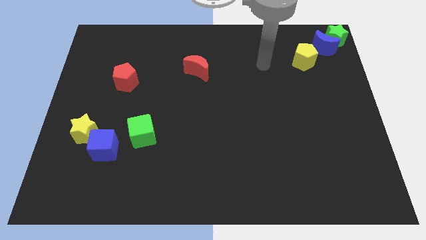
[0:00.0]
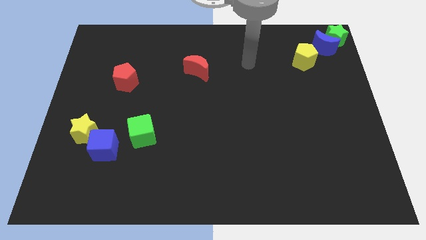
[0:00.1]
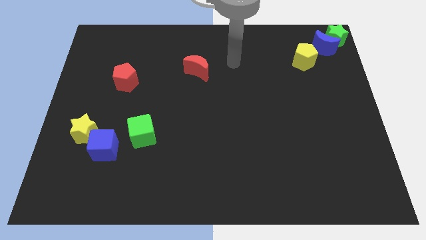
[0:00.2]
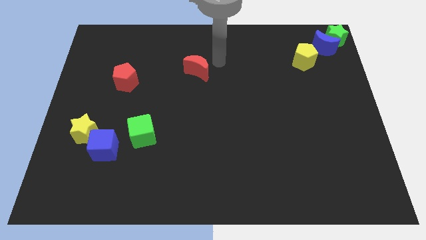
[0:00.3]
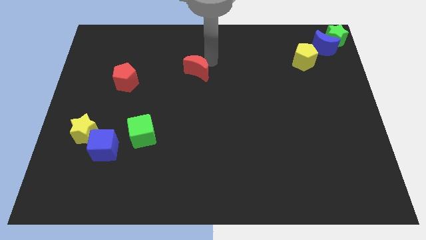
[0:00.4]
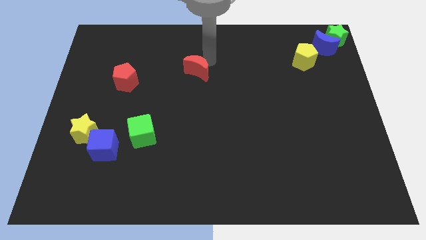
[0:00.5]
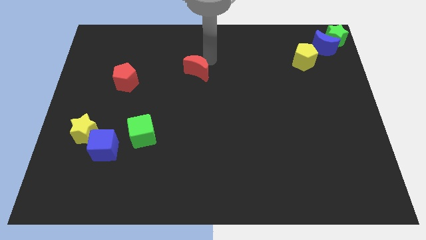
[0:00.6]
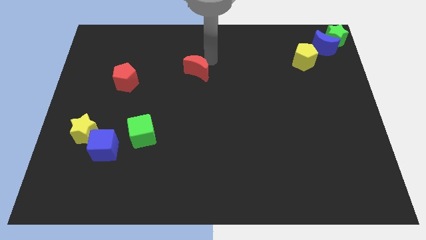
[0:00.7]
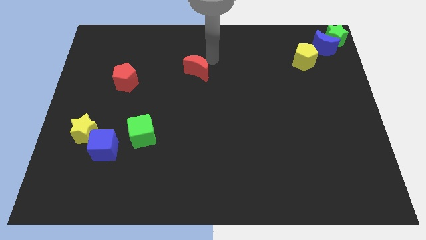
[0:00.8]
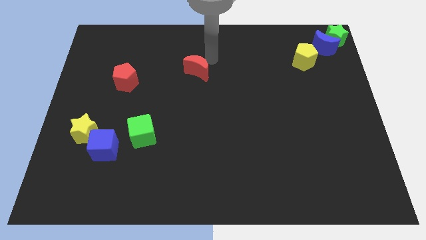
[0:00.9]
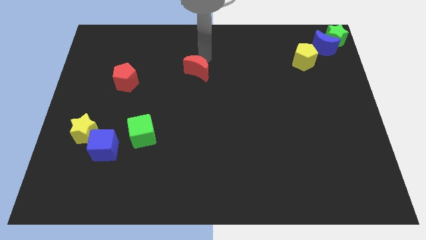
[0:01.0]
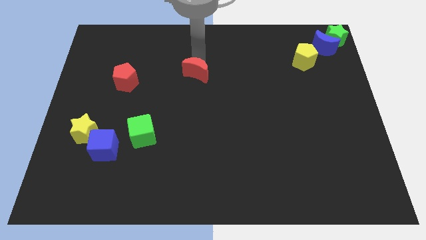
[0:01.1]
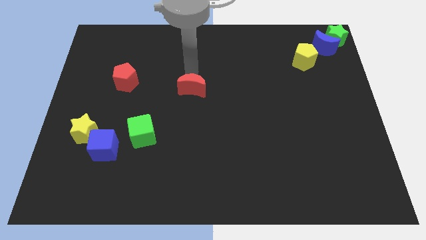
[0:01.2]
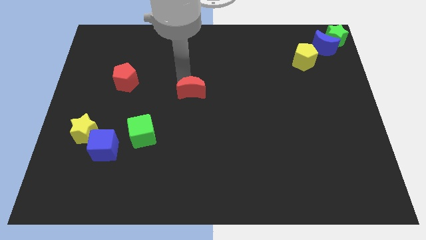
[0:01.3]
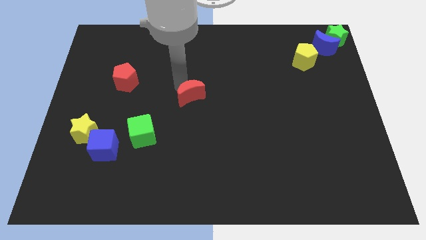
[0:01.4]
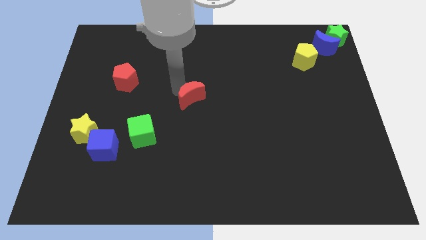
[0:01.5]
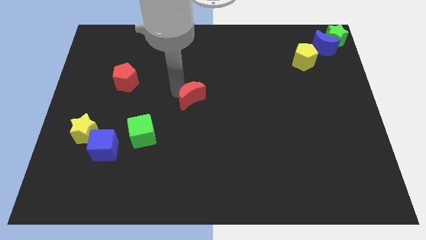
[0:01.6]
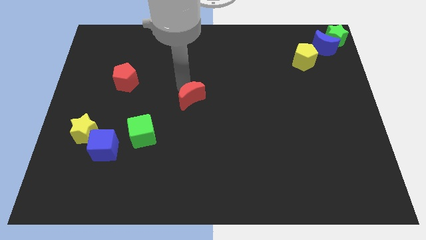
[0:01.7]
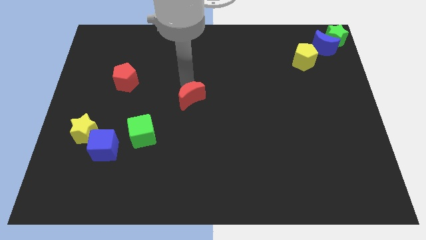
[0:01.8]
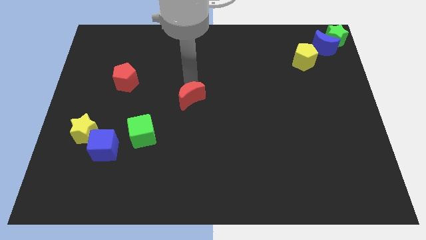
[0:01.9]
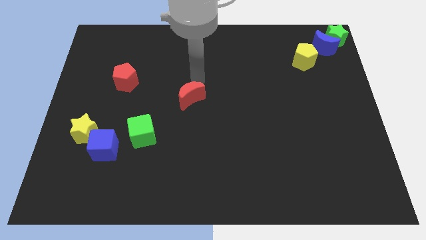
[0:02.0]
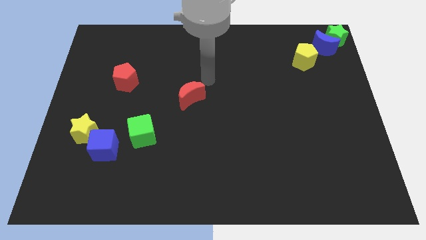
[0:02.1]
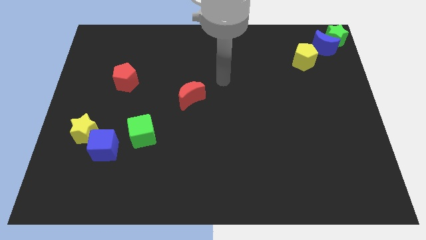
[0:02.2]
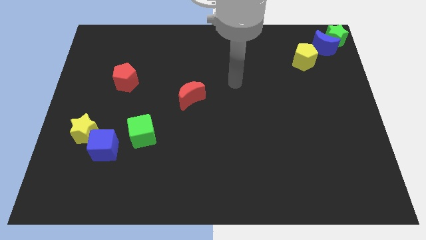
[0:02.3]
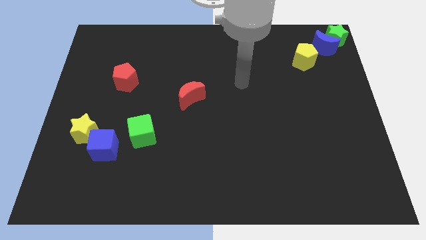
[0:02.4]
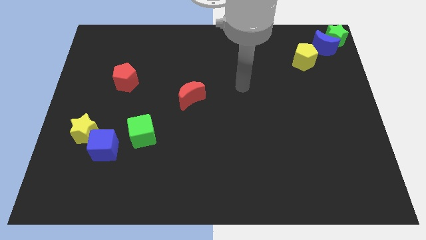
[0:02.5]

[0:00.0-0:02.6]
move the red crescent diagonal to the green cube

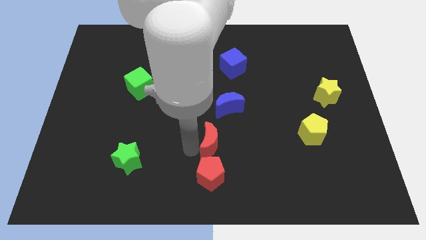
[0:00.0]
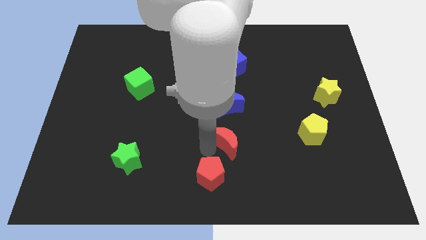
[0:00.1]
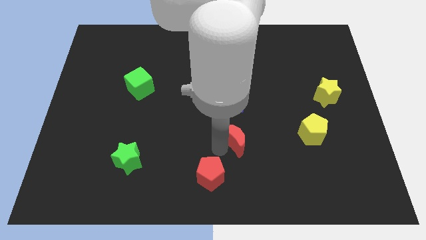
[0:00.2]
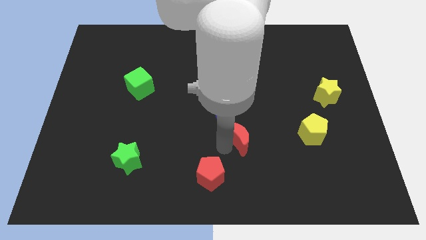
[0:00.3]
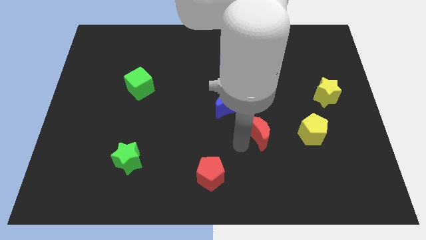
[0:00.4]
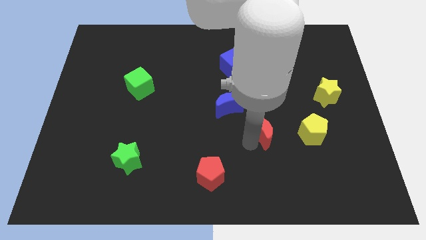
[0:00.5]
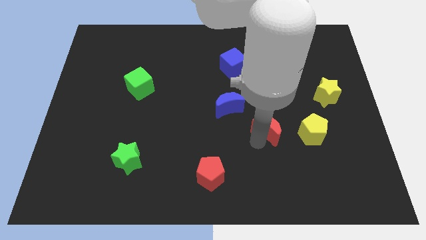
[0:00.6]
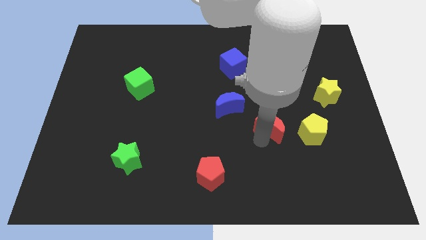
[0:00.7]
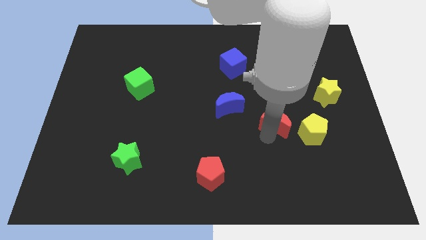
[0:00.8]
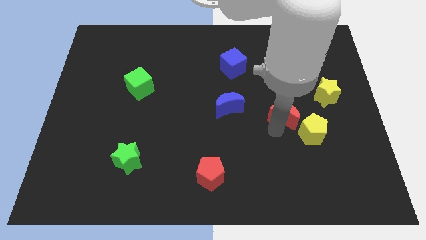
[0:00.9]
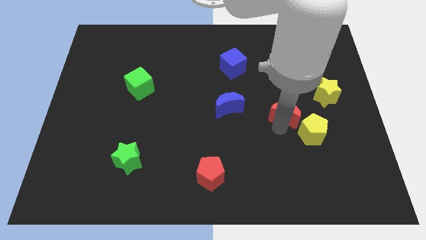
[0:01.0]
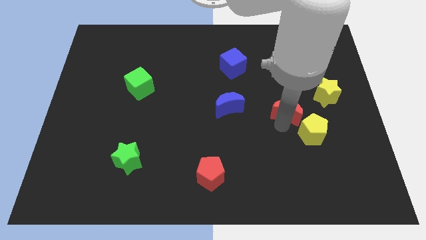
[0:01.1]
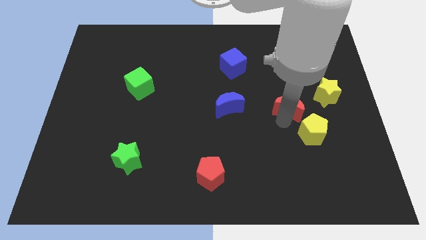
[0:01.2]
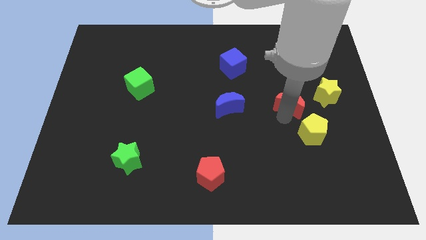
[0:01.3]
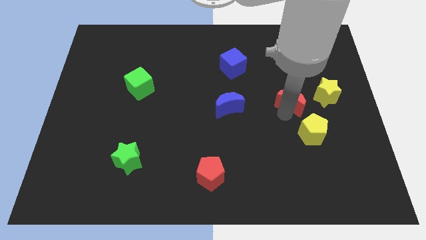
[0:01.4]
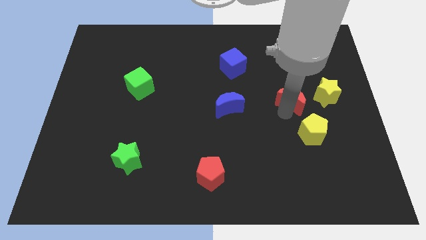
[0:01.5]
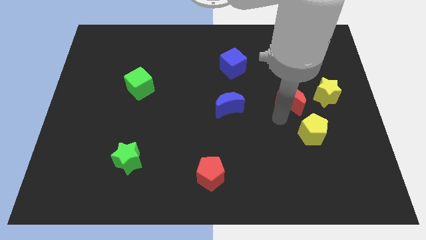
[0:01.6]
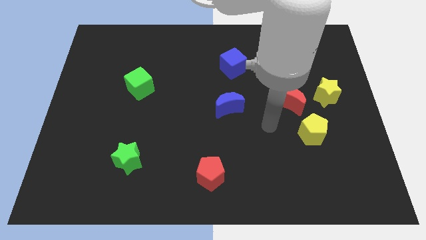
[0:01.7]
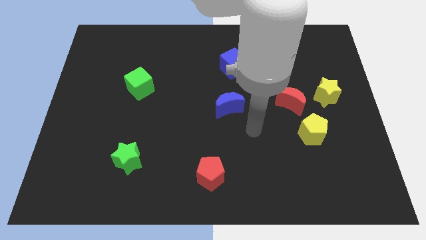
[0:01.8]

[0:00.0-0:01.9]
move the red crescent towards the top right side of the board

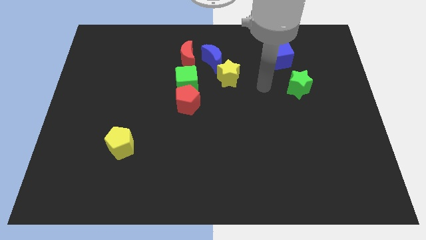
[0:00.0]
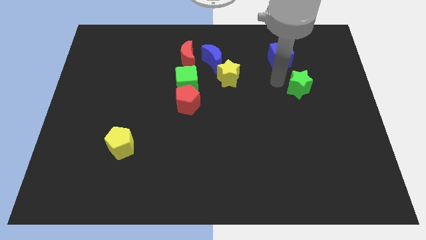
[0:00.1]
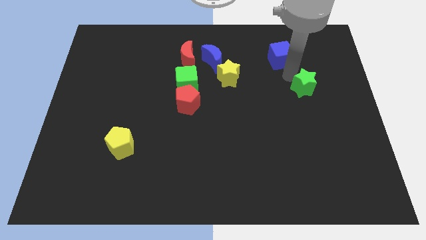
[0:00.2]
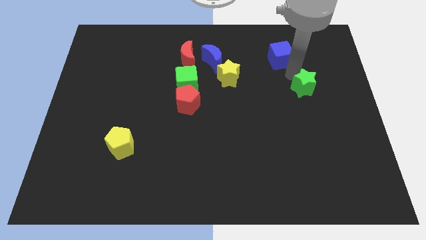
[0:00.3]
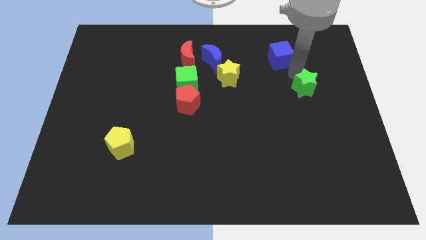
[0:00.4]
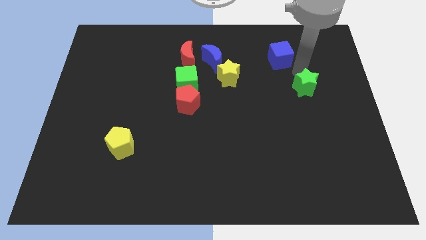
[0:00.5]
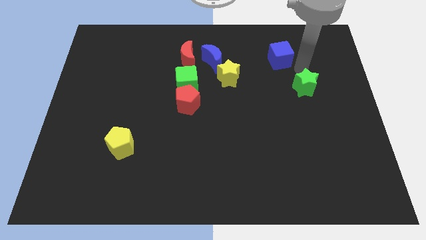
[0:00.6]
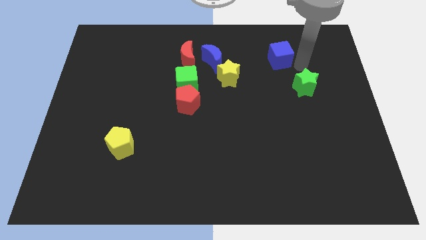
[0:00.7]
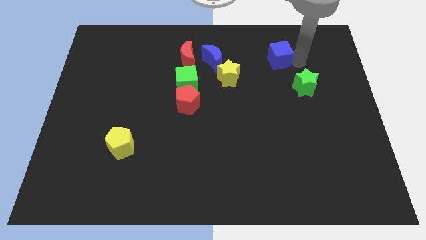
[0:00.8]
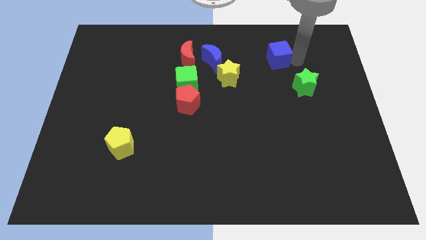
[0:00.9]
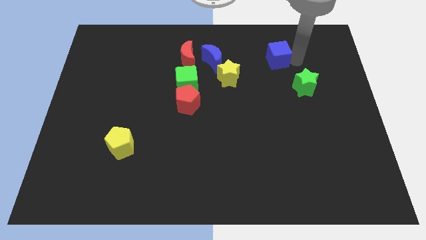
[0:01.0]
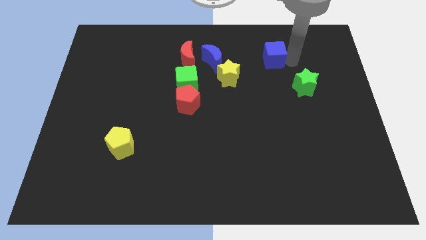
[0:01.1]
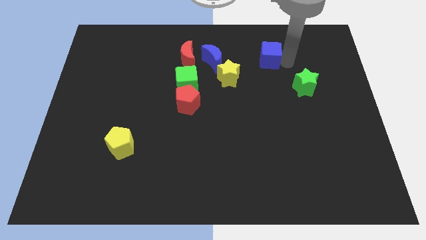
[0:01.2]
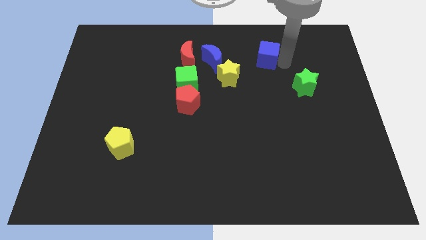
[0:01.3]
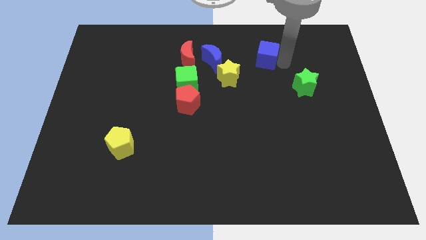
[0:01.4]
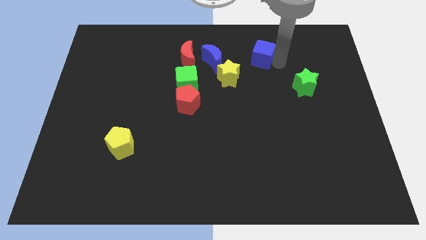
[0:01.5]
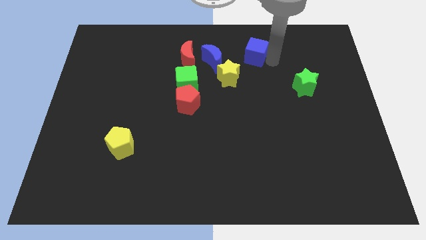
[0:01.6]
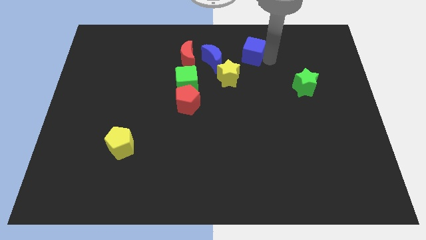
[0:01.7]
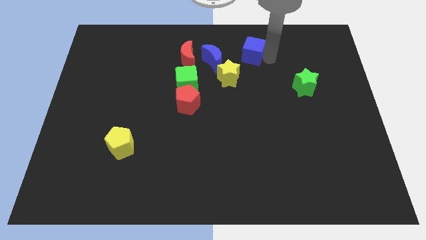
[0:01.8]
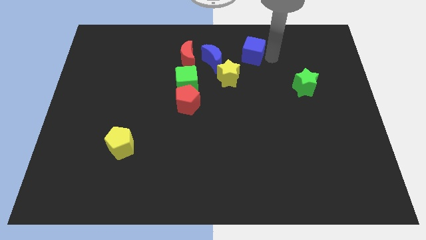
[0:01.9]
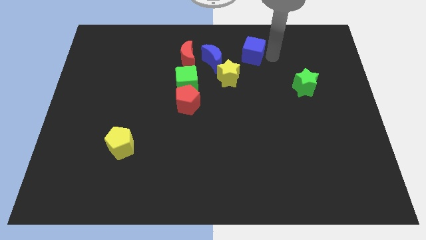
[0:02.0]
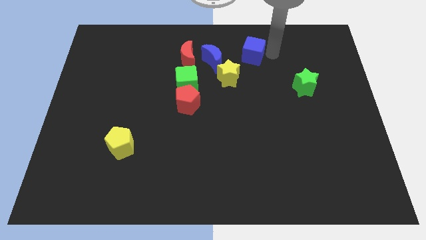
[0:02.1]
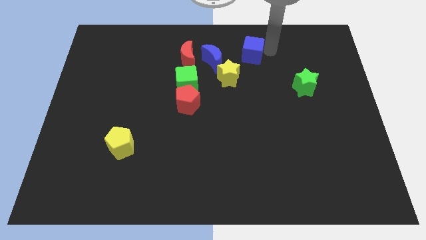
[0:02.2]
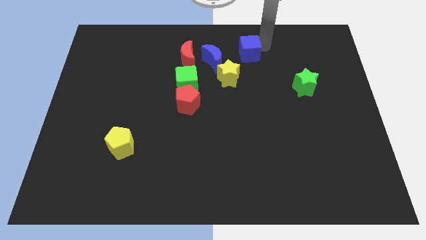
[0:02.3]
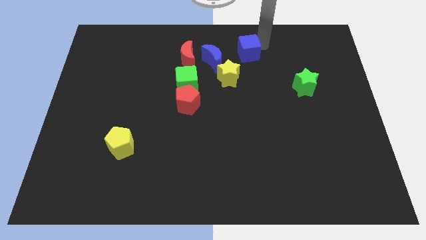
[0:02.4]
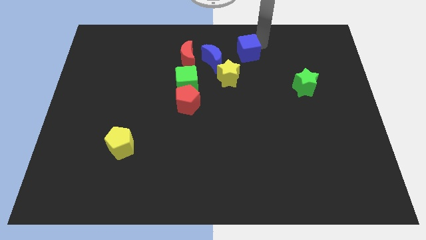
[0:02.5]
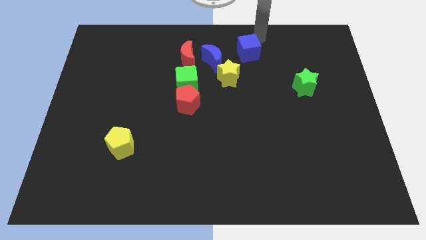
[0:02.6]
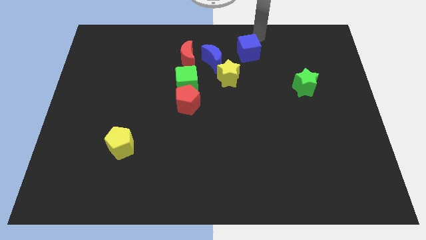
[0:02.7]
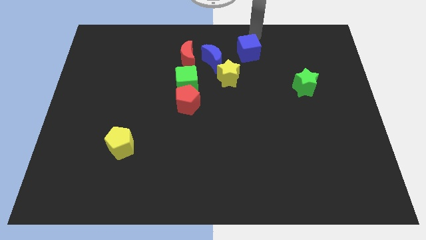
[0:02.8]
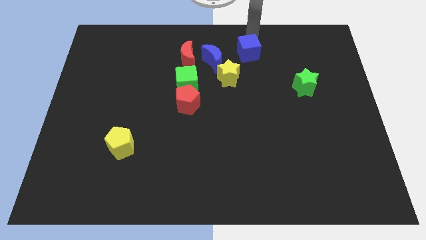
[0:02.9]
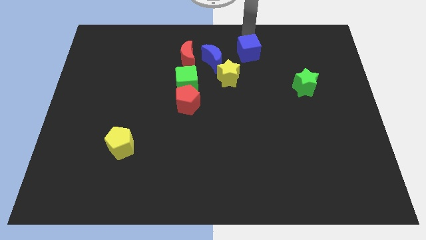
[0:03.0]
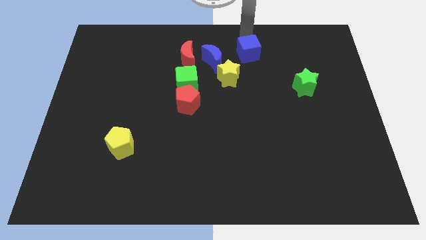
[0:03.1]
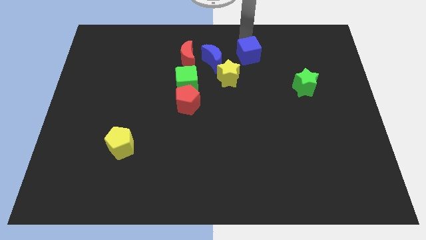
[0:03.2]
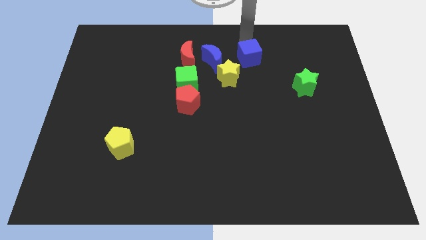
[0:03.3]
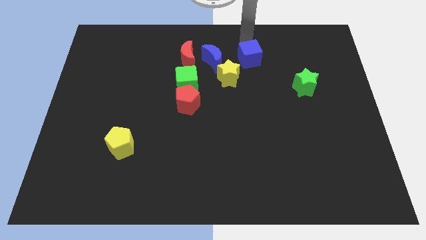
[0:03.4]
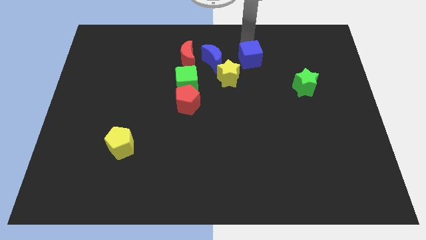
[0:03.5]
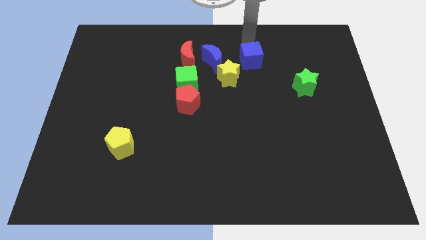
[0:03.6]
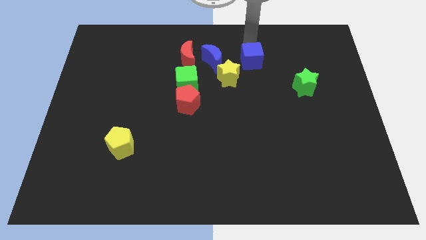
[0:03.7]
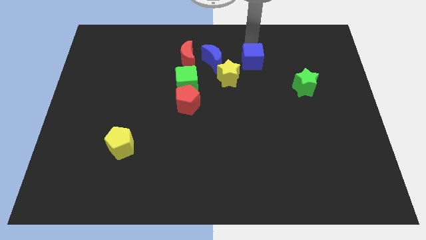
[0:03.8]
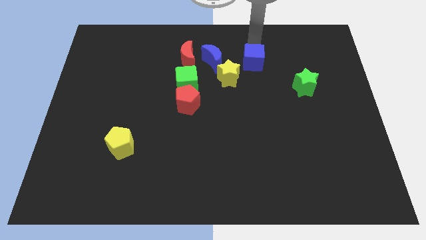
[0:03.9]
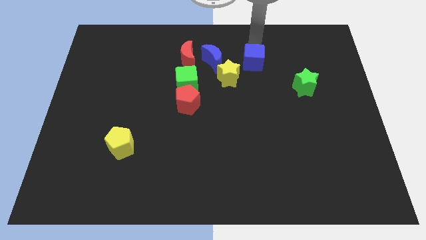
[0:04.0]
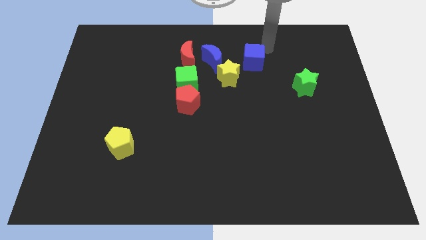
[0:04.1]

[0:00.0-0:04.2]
move the blue cube right to the blue crescent

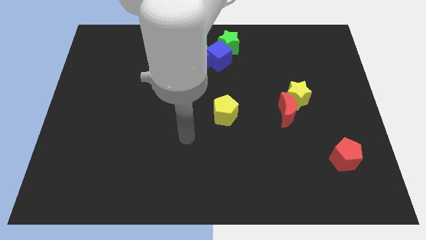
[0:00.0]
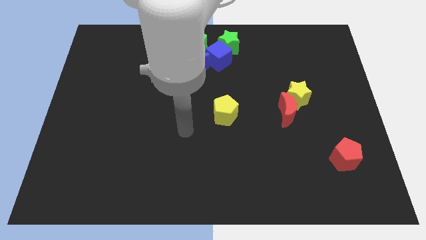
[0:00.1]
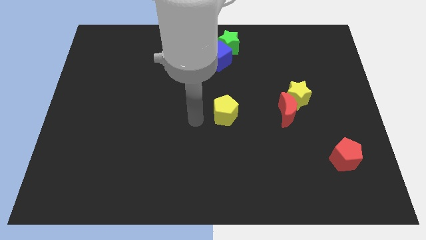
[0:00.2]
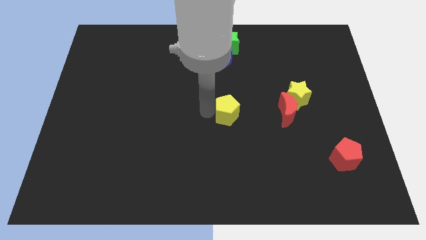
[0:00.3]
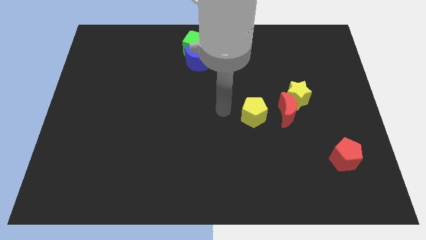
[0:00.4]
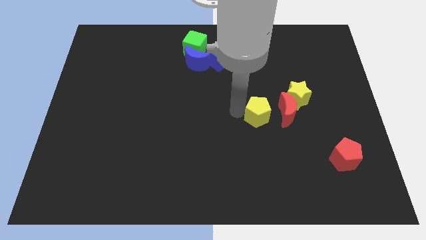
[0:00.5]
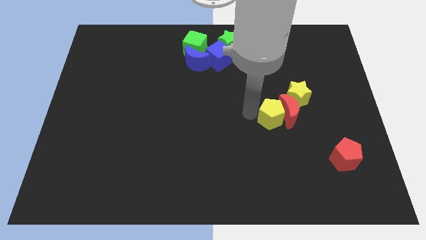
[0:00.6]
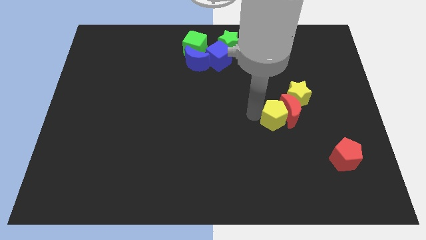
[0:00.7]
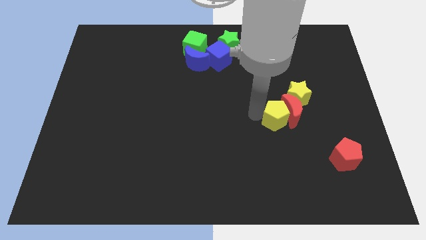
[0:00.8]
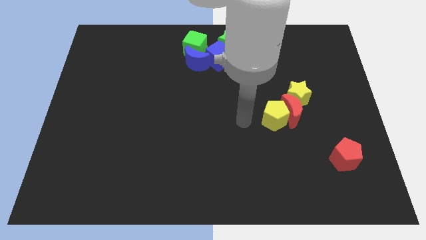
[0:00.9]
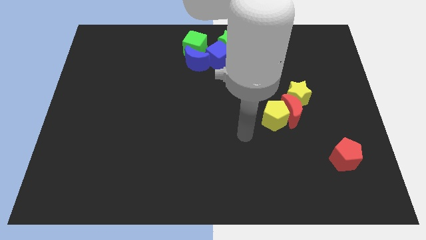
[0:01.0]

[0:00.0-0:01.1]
take the yellow pentagon into the left side of the red crescent
